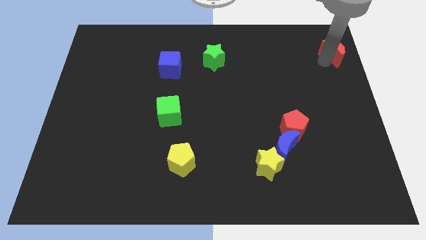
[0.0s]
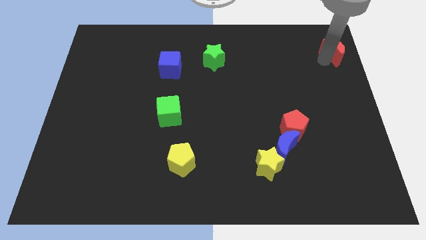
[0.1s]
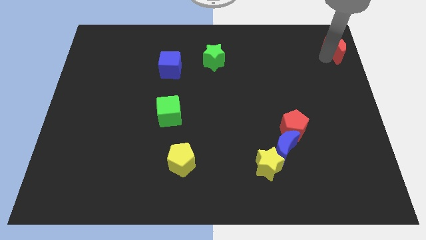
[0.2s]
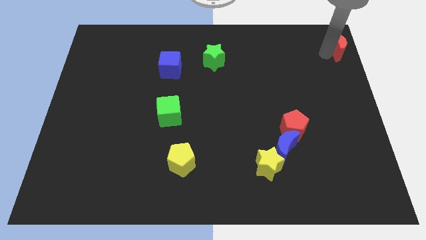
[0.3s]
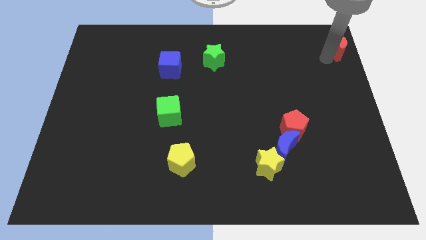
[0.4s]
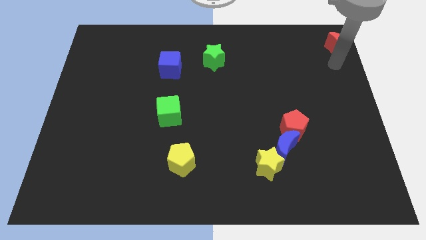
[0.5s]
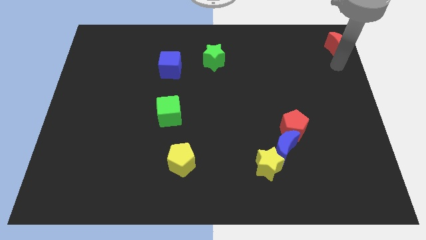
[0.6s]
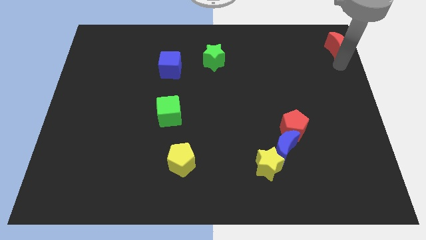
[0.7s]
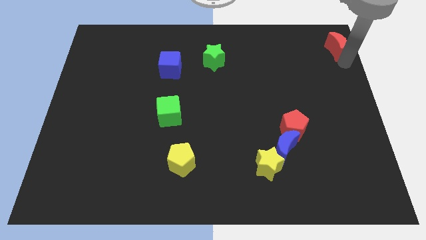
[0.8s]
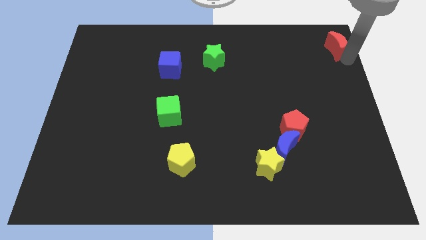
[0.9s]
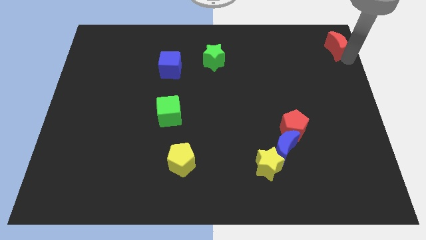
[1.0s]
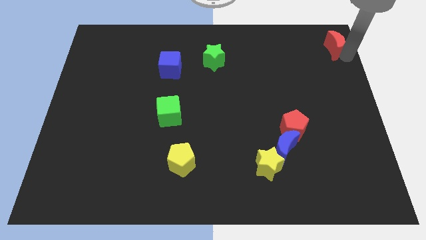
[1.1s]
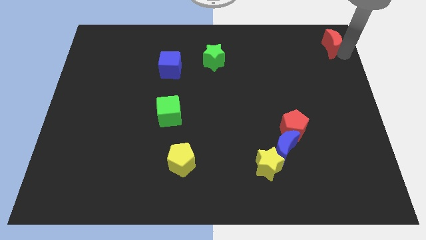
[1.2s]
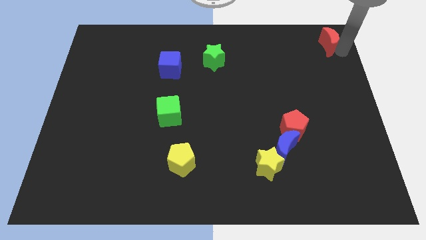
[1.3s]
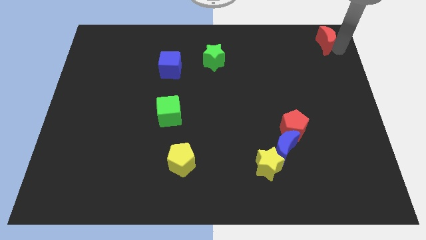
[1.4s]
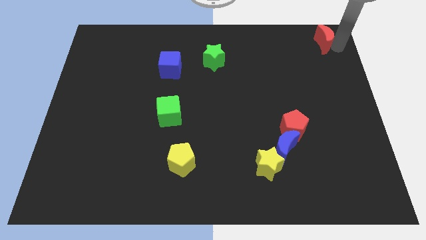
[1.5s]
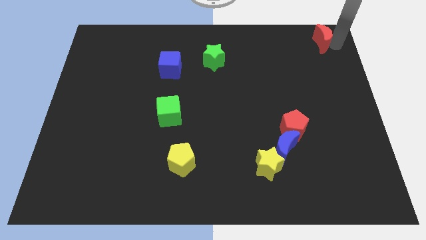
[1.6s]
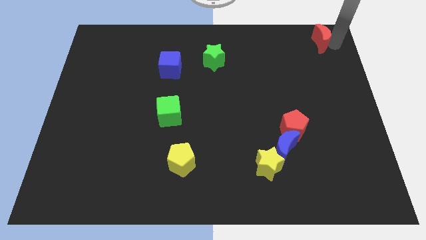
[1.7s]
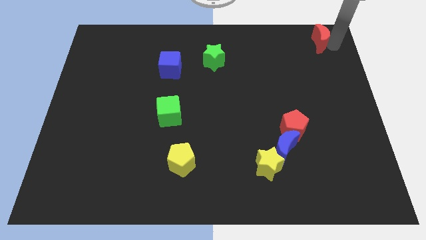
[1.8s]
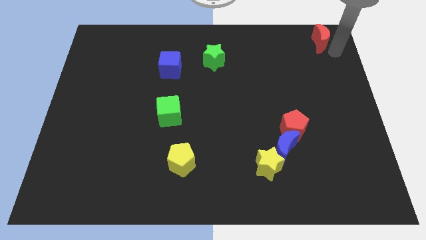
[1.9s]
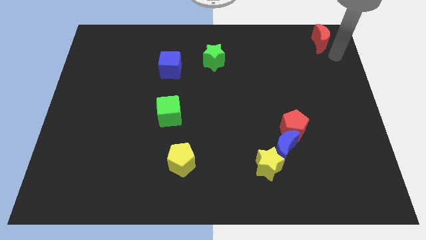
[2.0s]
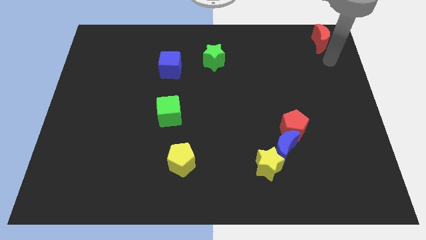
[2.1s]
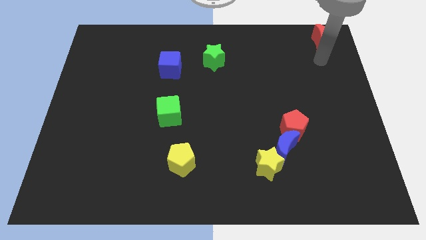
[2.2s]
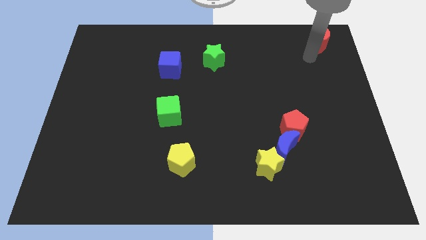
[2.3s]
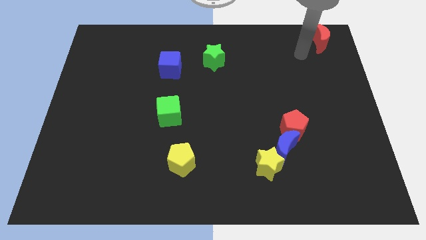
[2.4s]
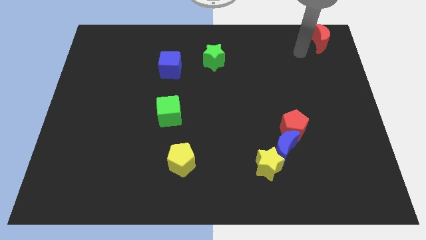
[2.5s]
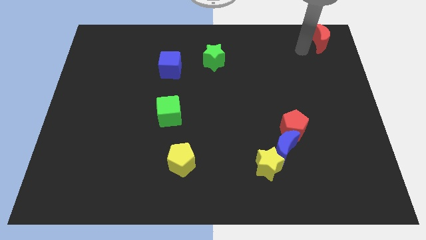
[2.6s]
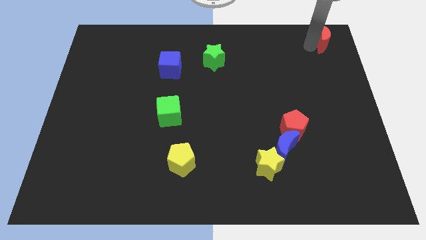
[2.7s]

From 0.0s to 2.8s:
move the red moon to the top right corner

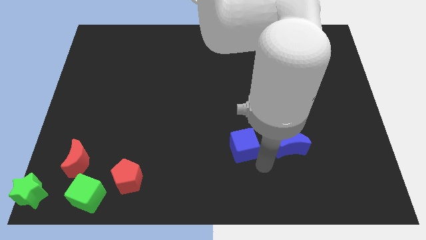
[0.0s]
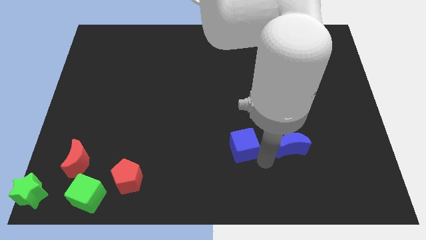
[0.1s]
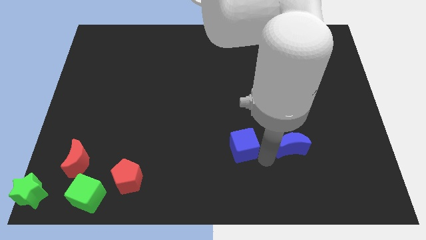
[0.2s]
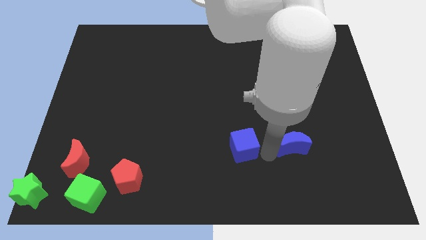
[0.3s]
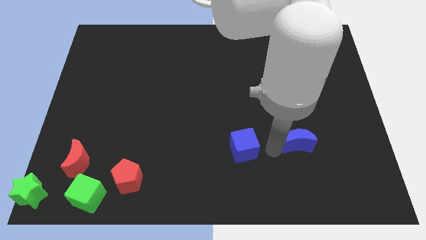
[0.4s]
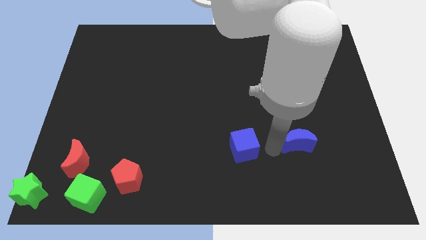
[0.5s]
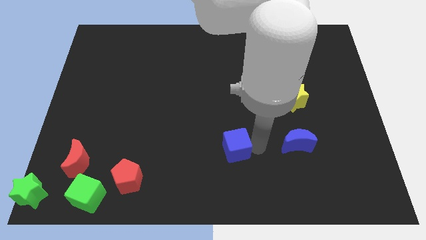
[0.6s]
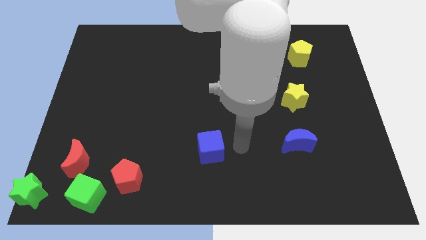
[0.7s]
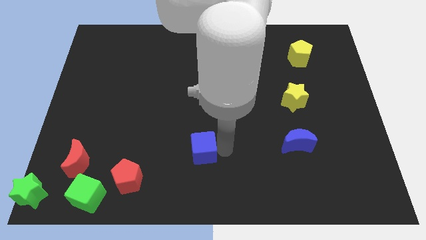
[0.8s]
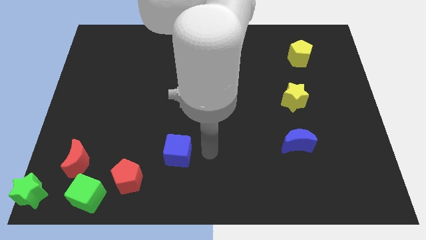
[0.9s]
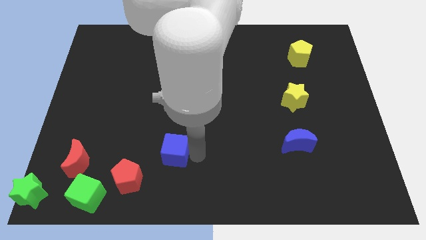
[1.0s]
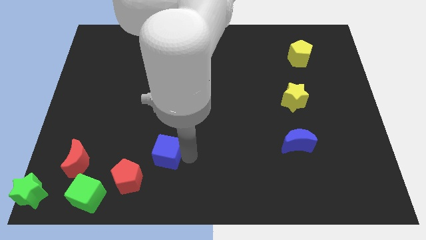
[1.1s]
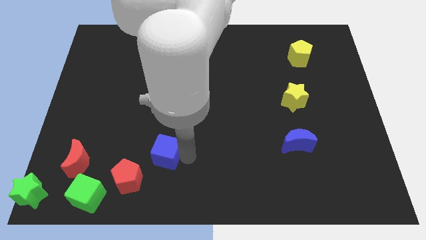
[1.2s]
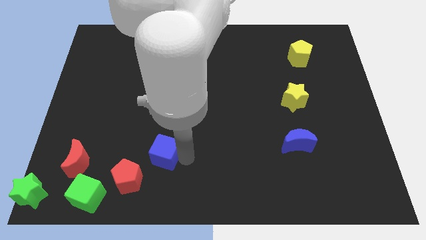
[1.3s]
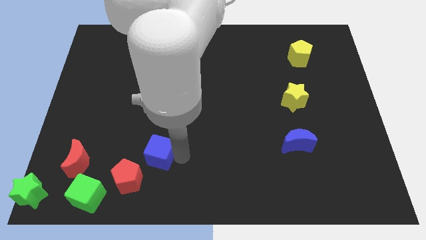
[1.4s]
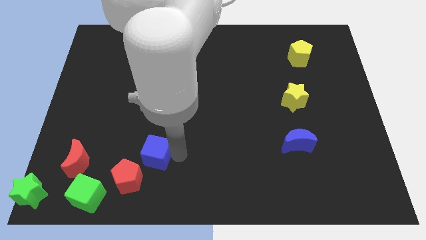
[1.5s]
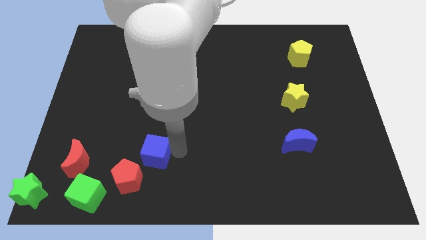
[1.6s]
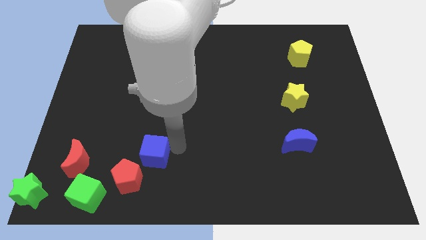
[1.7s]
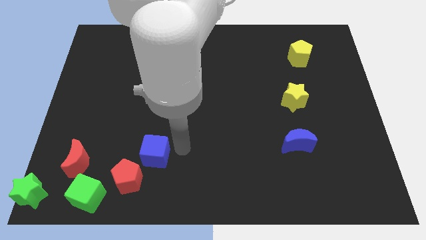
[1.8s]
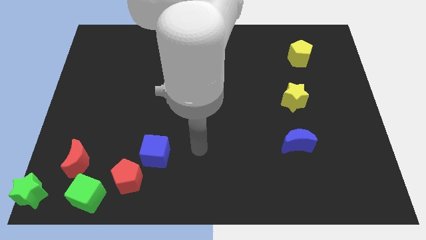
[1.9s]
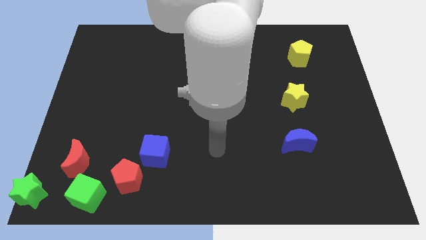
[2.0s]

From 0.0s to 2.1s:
place the blue cube at the top right of the red pentagon

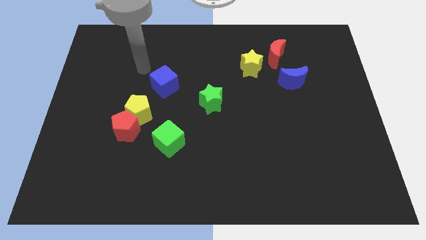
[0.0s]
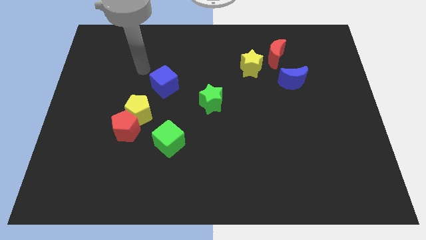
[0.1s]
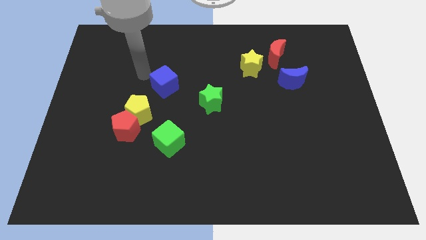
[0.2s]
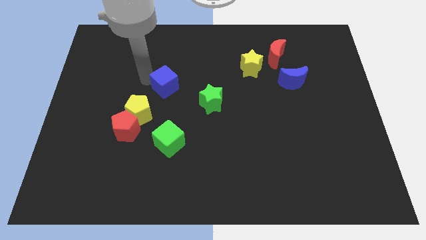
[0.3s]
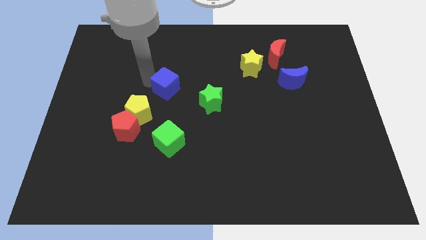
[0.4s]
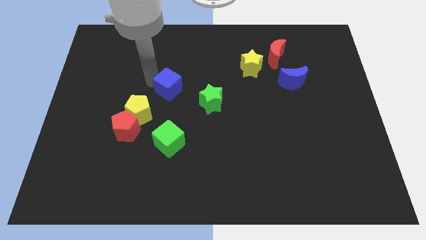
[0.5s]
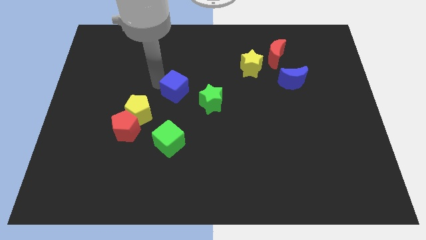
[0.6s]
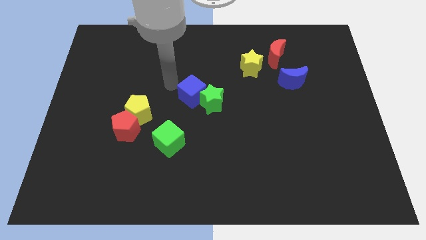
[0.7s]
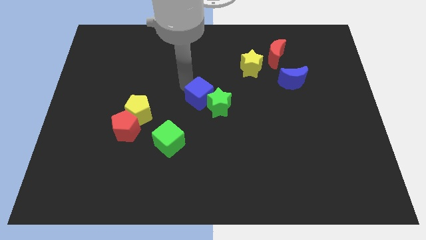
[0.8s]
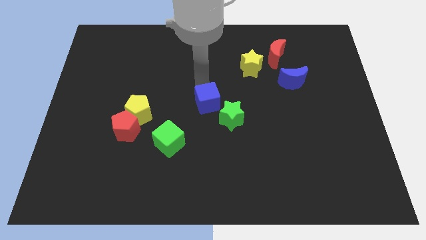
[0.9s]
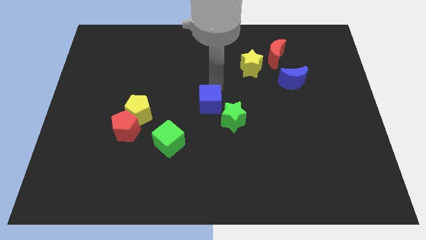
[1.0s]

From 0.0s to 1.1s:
slide blue cube into green star

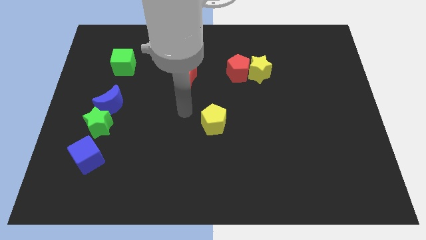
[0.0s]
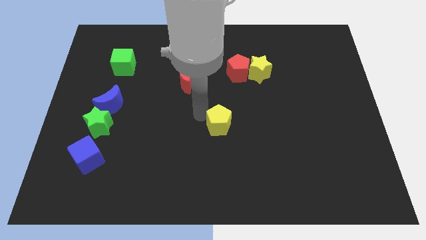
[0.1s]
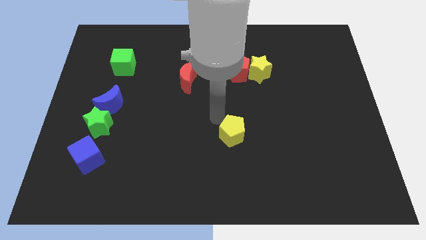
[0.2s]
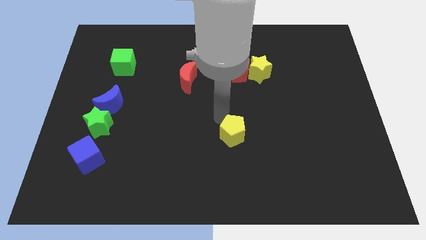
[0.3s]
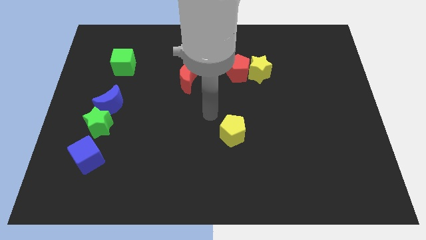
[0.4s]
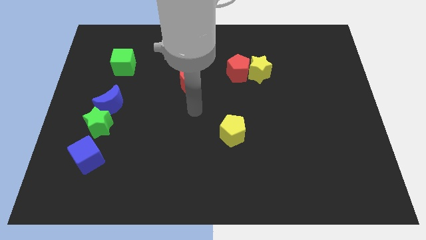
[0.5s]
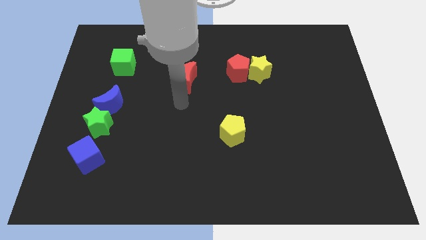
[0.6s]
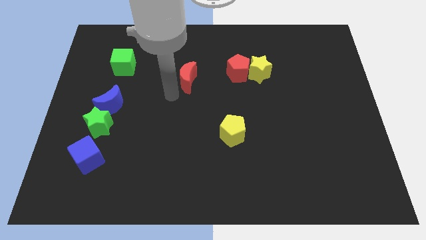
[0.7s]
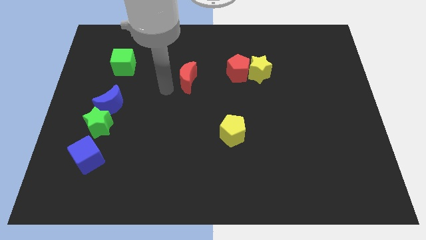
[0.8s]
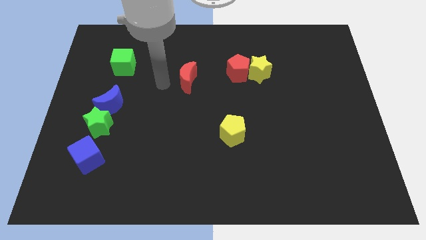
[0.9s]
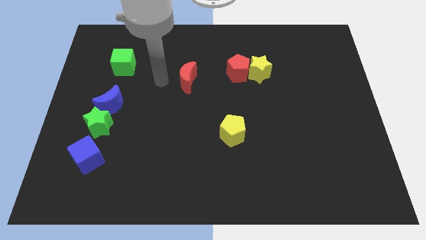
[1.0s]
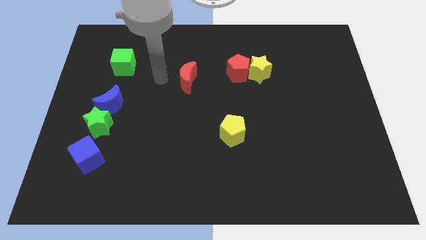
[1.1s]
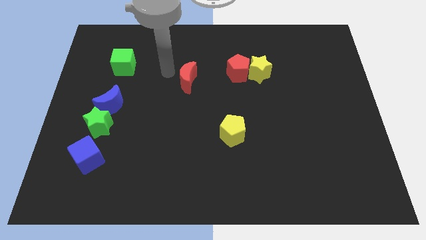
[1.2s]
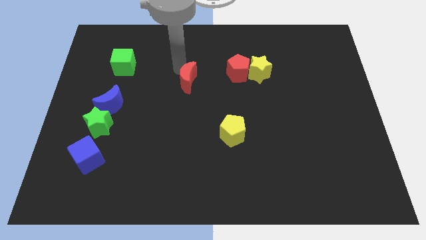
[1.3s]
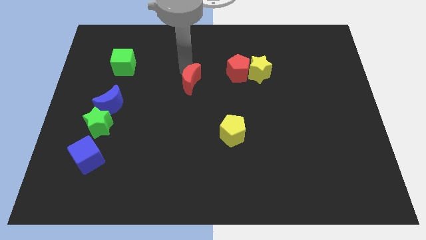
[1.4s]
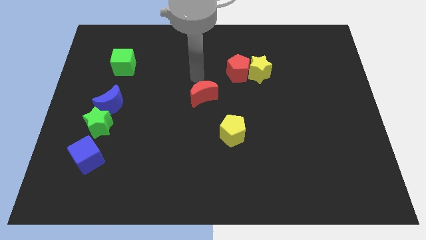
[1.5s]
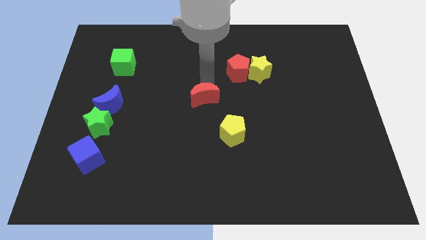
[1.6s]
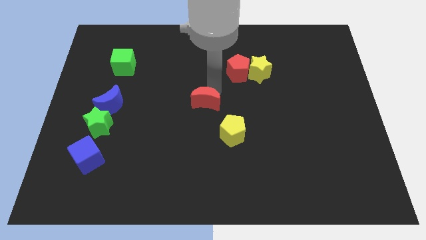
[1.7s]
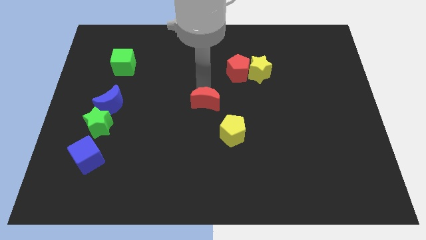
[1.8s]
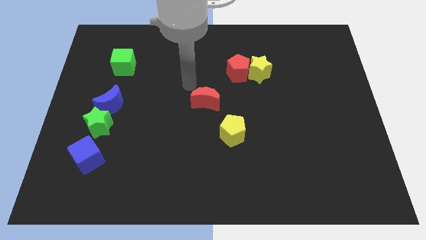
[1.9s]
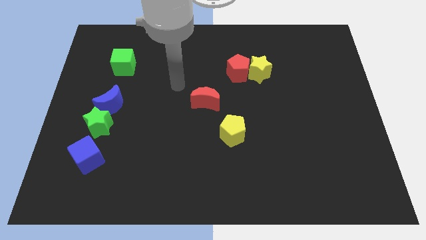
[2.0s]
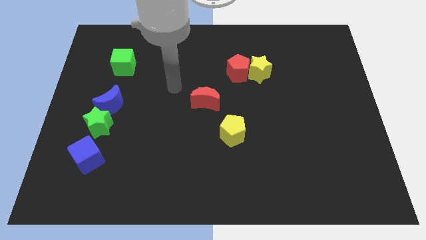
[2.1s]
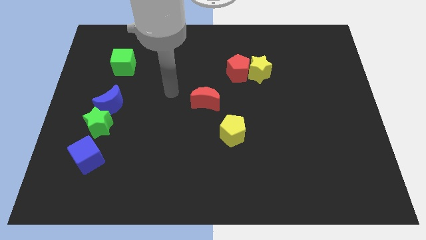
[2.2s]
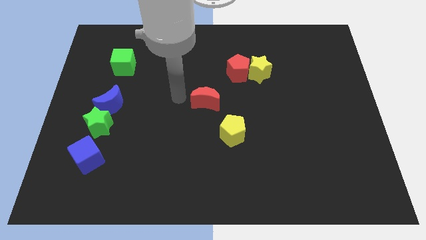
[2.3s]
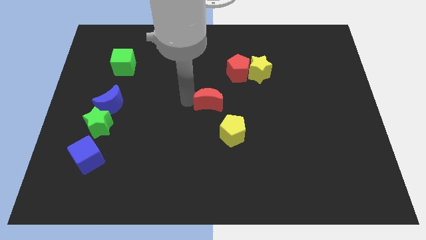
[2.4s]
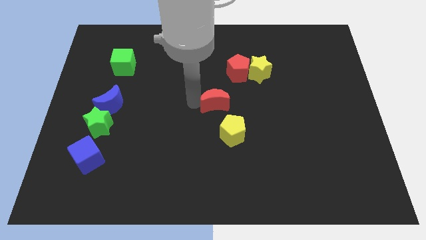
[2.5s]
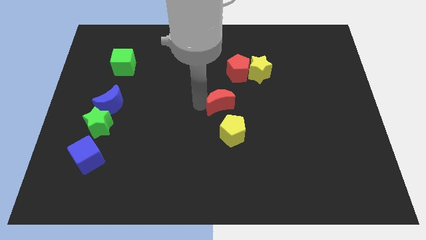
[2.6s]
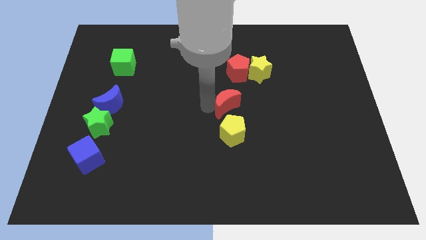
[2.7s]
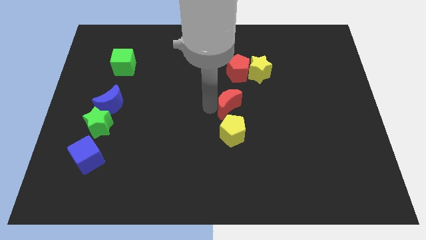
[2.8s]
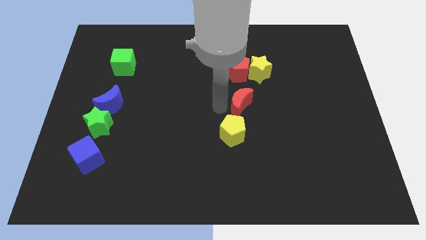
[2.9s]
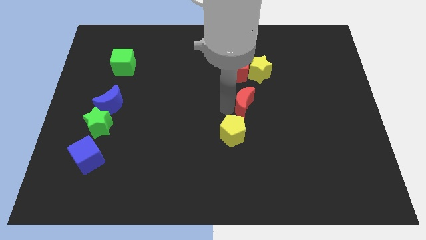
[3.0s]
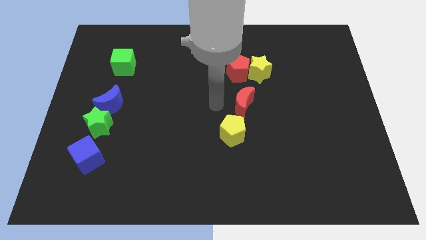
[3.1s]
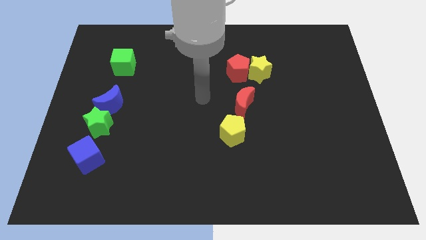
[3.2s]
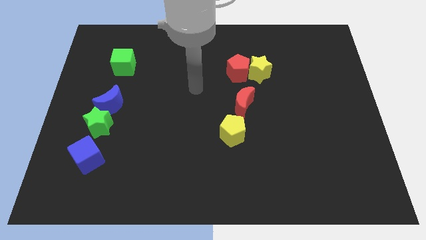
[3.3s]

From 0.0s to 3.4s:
place red crescent between yellow star and yellow pentagon
